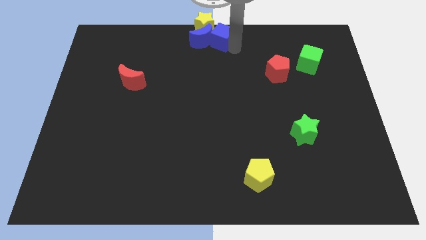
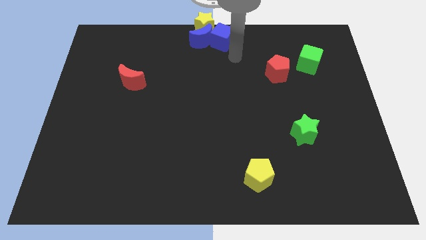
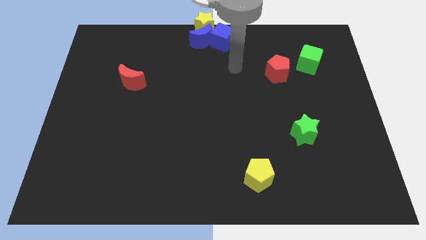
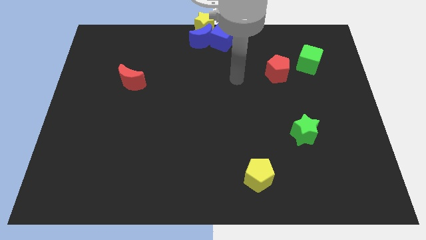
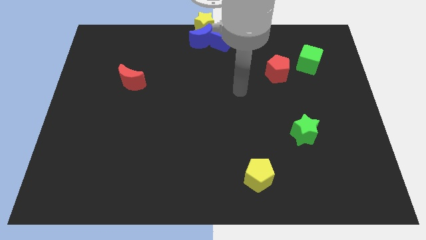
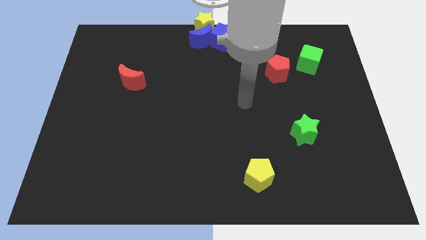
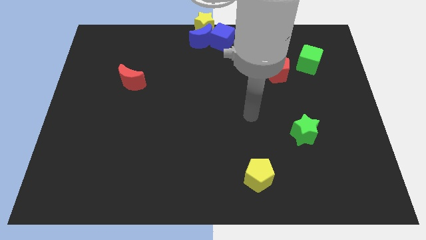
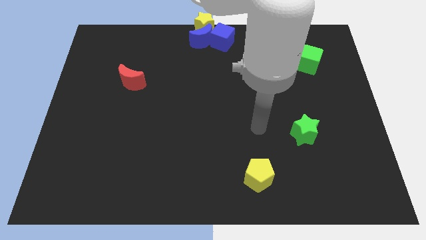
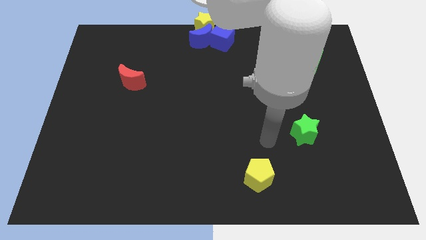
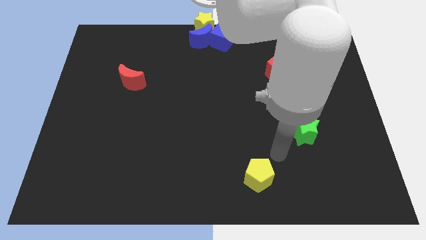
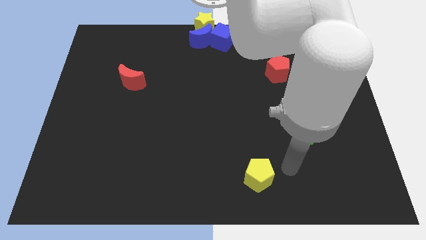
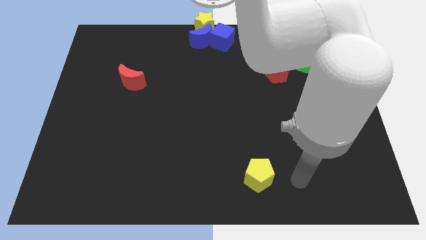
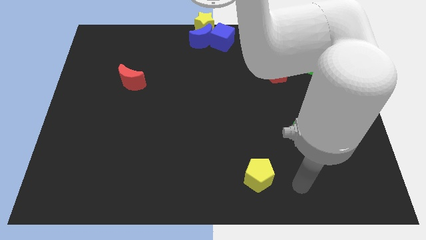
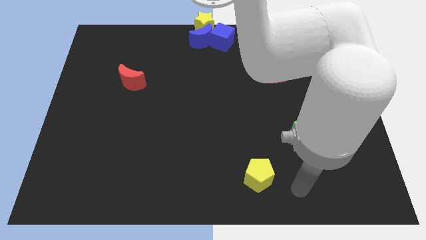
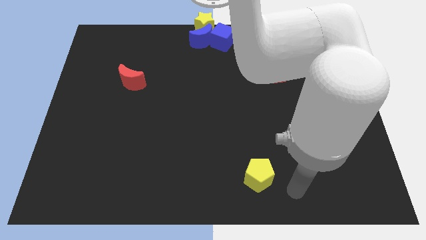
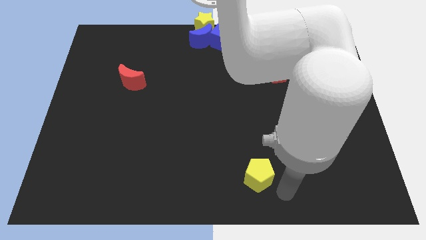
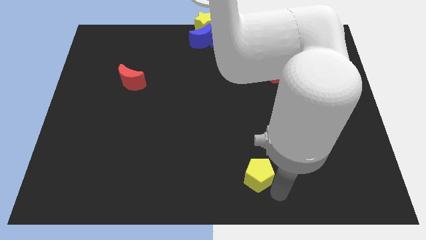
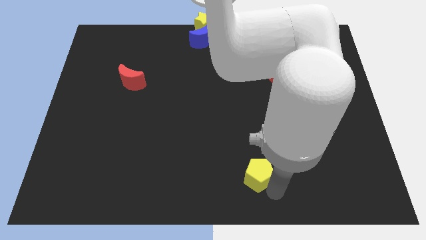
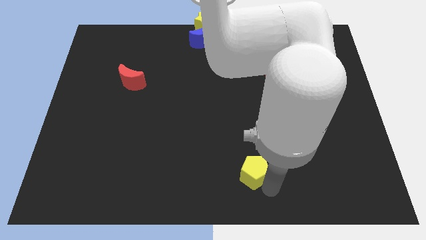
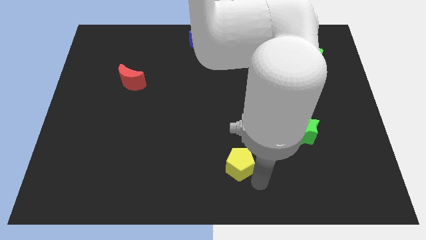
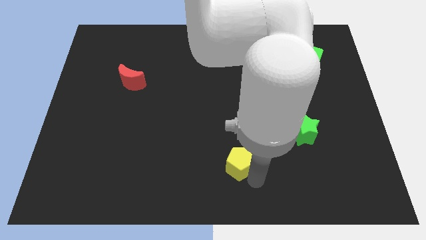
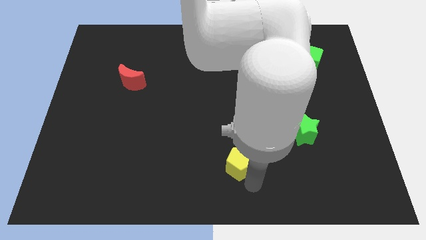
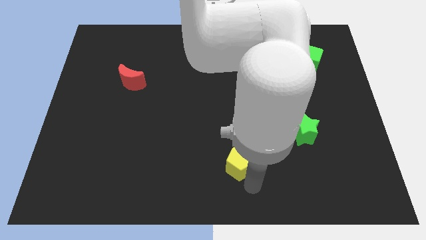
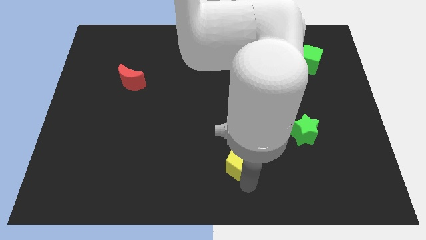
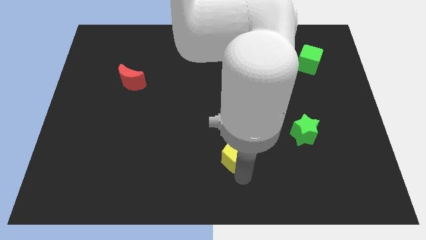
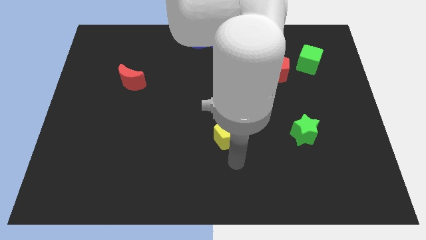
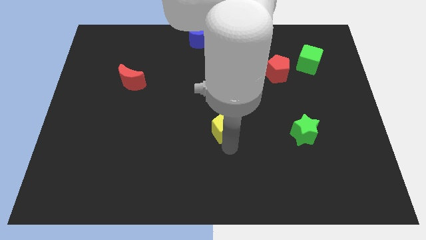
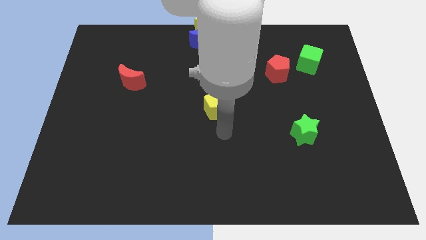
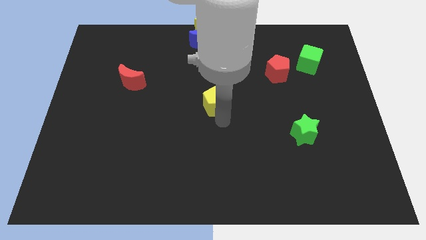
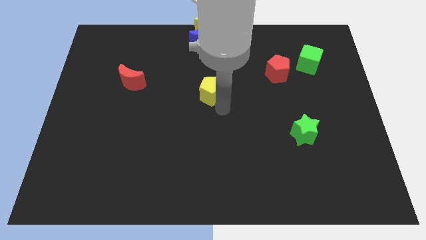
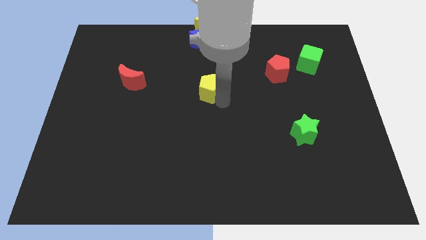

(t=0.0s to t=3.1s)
drag the yellow pentagon diagonally top left to the green star

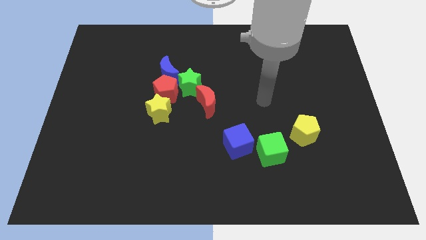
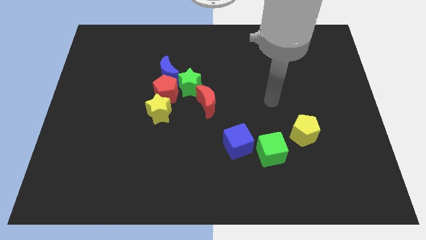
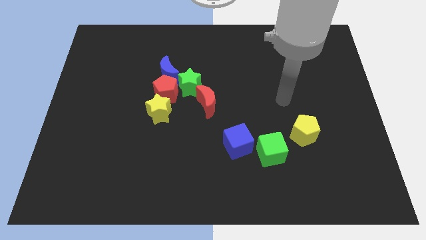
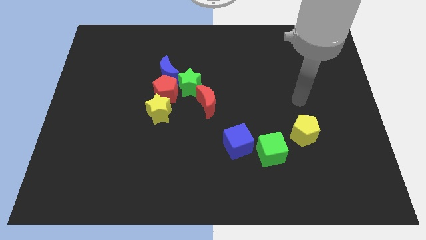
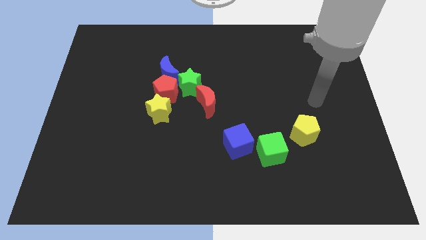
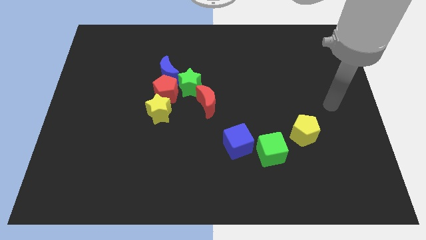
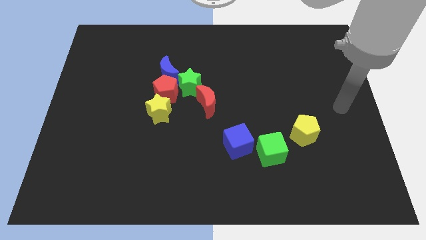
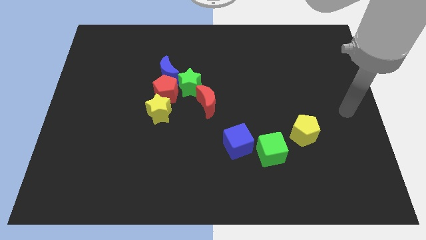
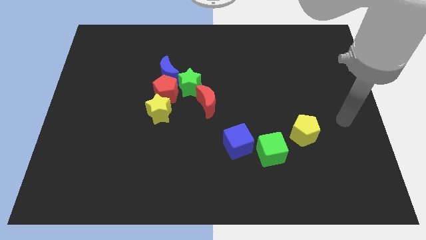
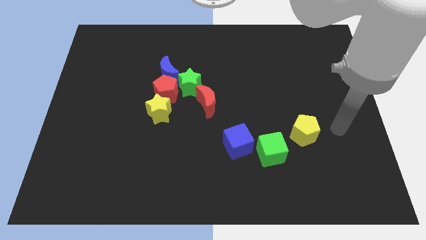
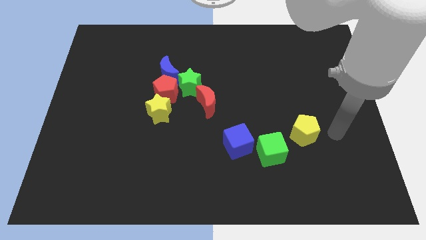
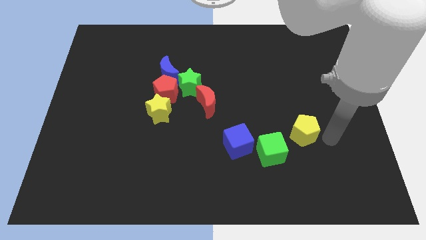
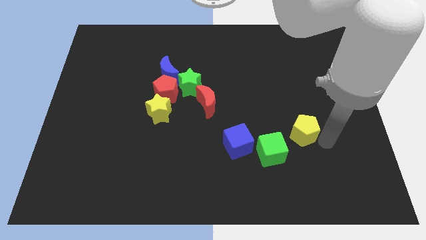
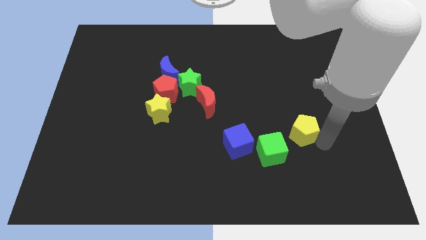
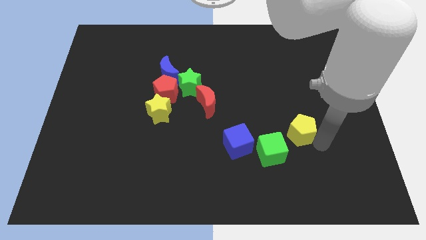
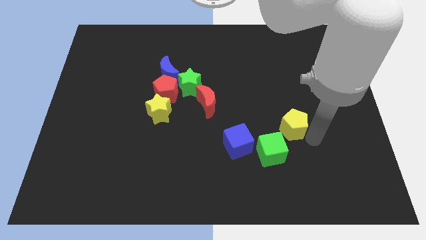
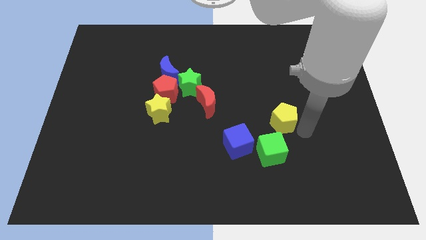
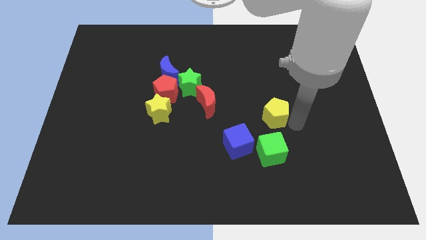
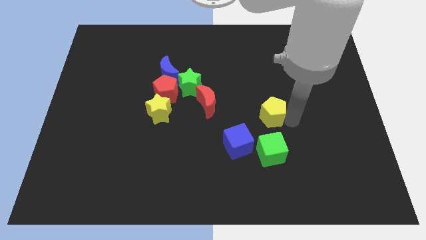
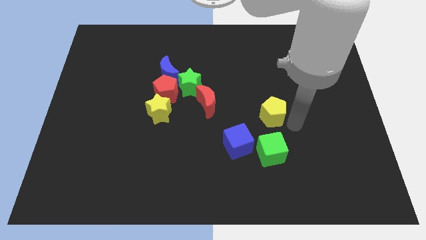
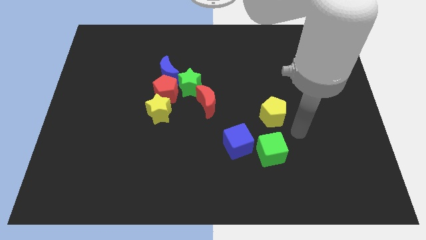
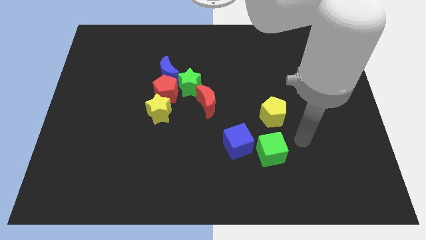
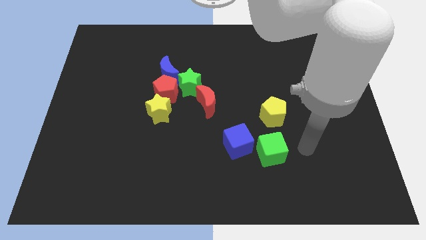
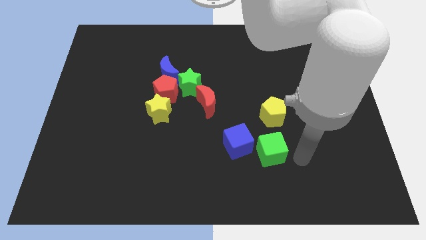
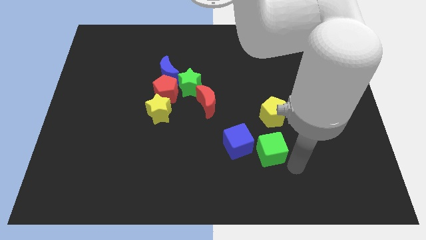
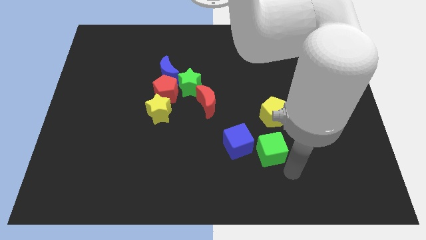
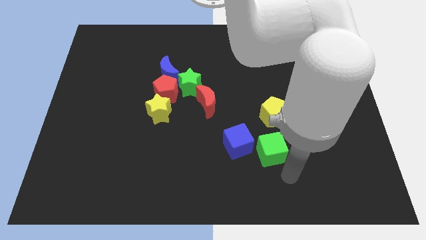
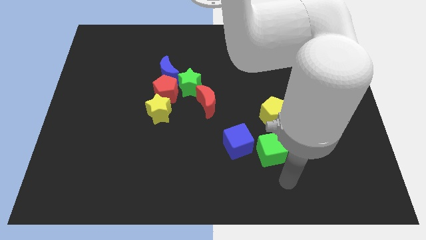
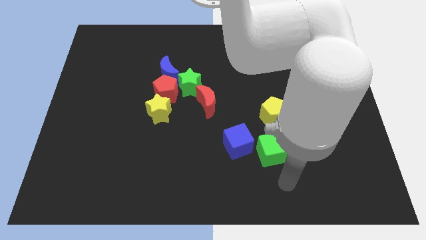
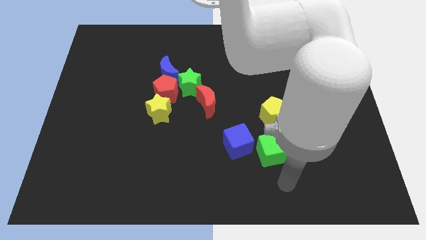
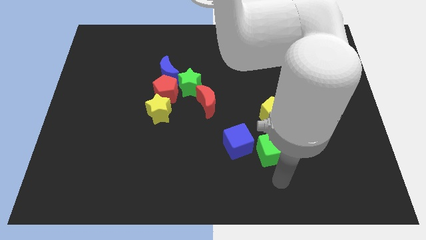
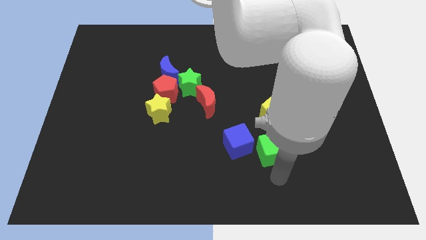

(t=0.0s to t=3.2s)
place the yellow pentagon diagonally to the blue cube

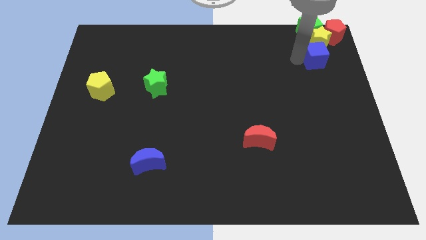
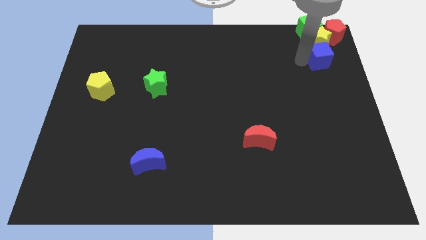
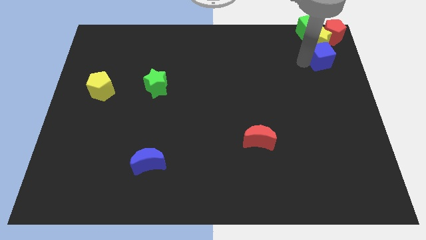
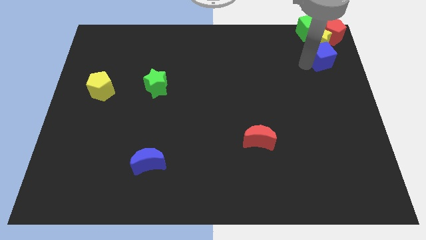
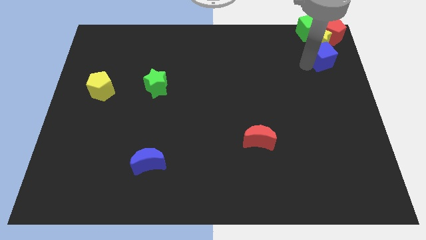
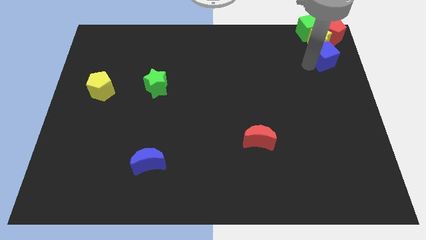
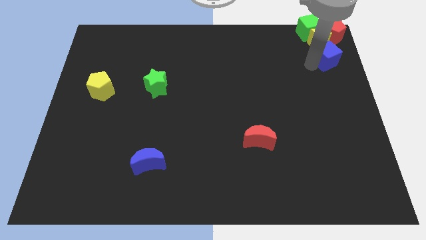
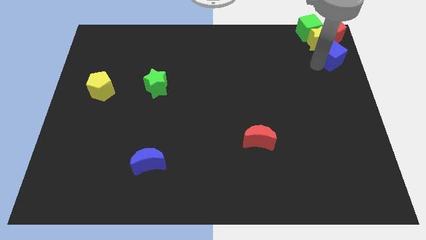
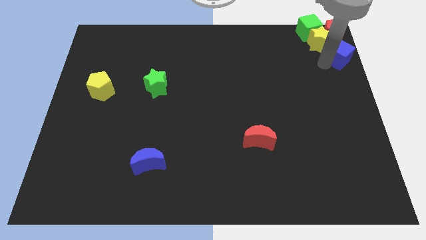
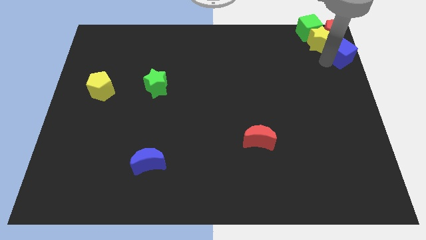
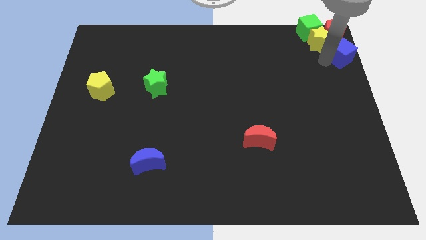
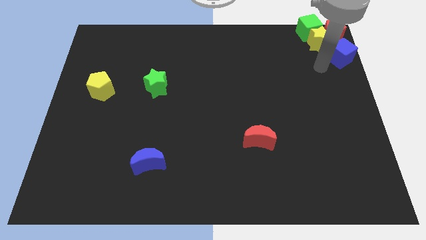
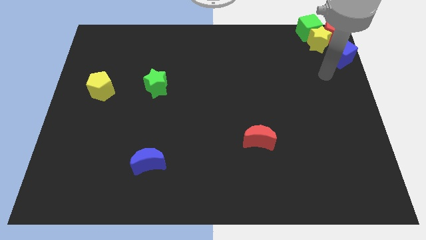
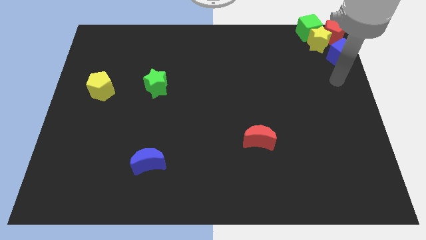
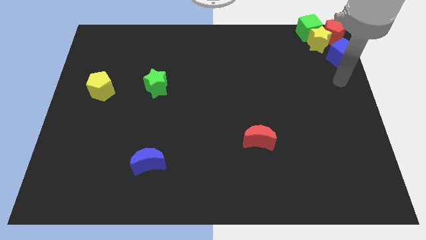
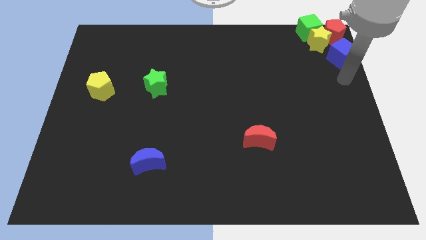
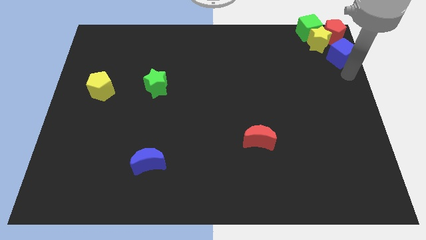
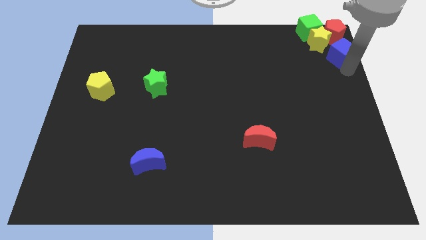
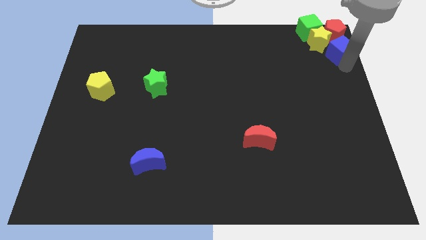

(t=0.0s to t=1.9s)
place the blue cube below the red pentagon

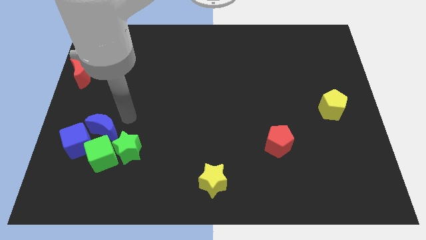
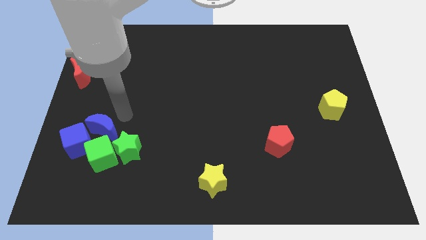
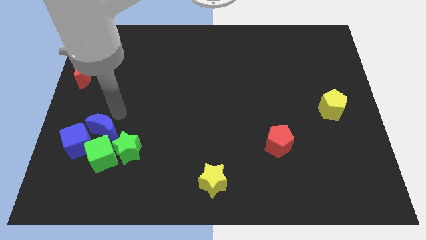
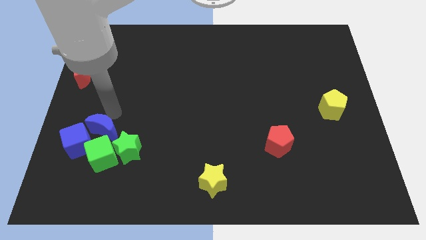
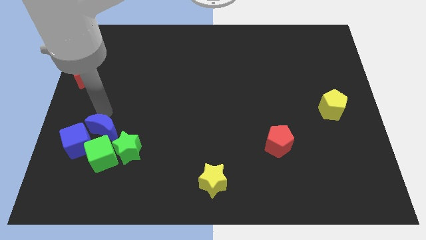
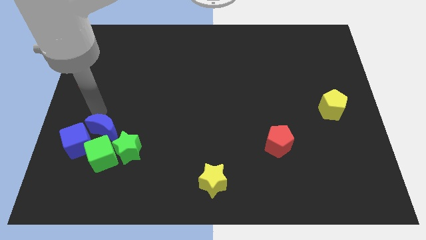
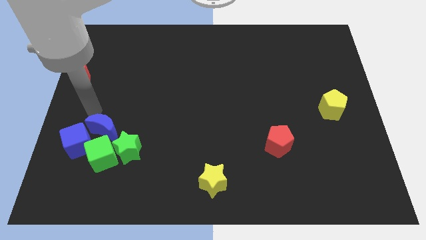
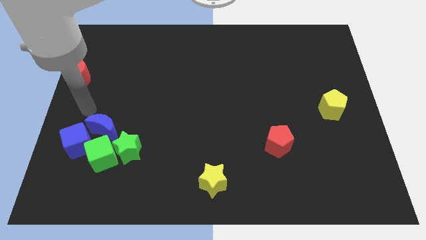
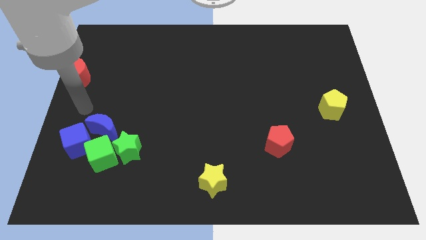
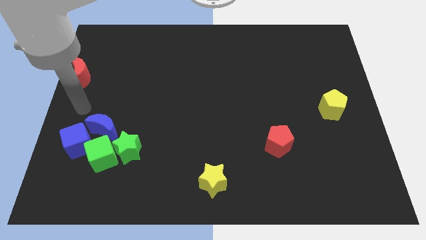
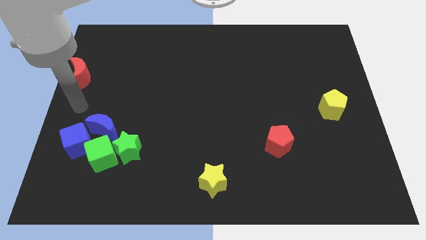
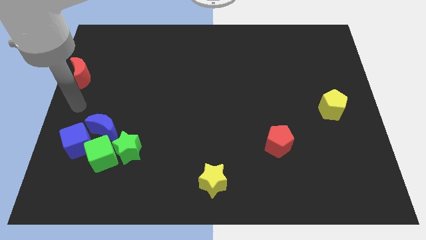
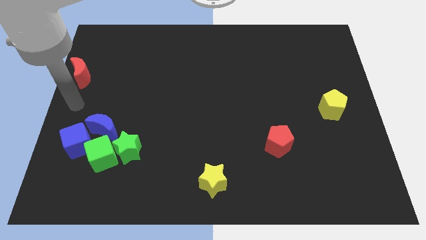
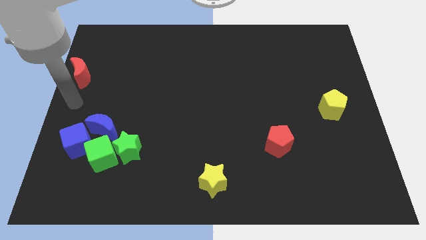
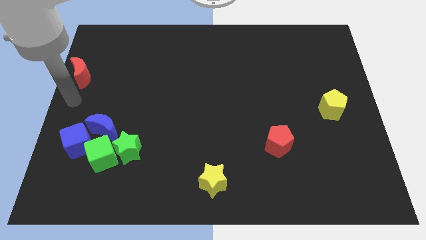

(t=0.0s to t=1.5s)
move arm towards the red crescent on the top left of the board
